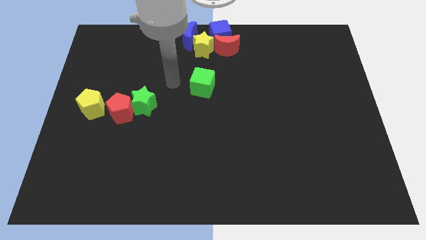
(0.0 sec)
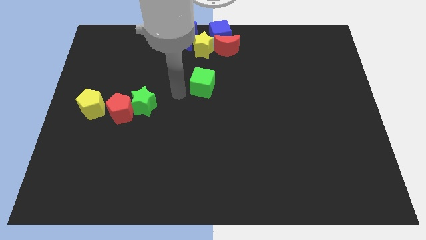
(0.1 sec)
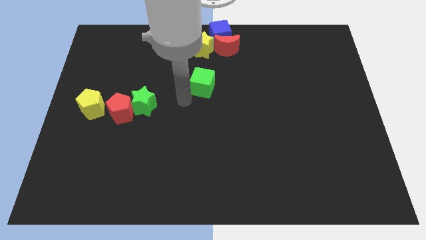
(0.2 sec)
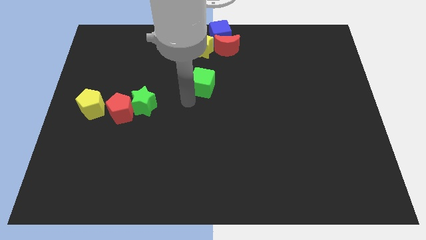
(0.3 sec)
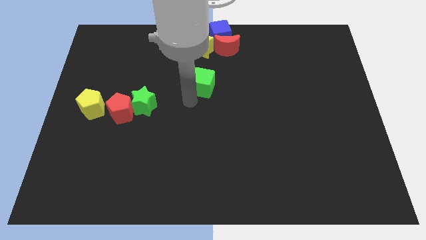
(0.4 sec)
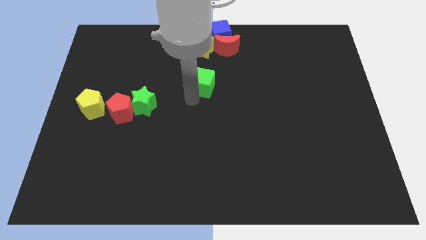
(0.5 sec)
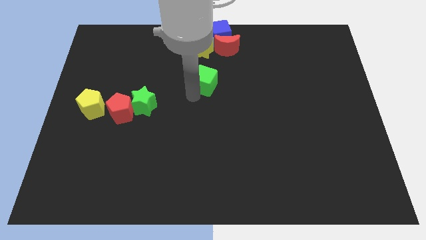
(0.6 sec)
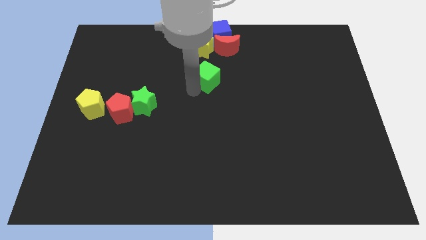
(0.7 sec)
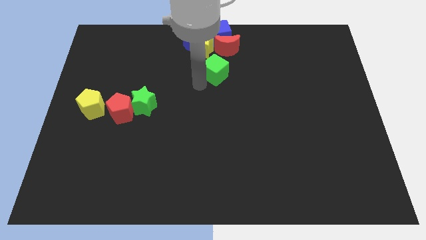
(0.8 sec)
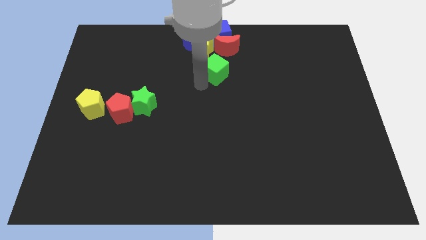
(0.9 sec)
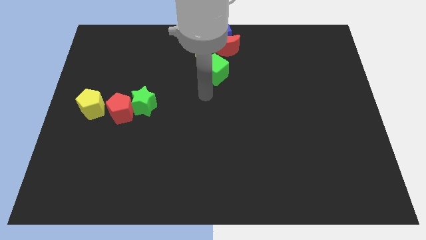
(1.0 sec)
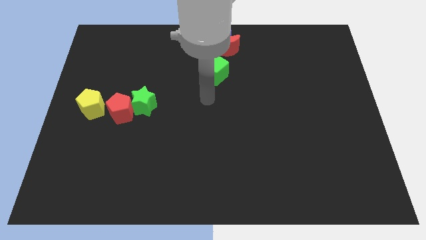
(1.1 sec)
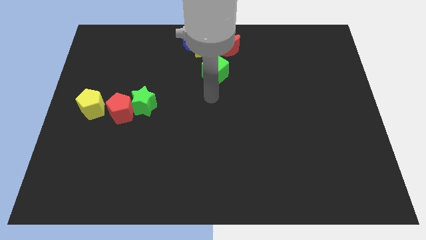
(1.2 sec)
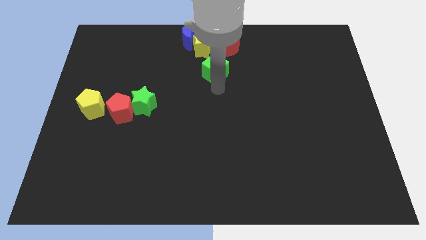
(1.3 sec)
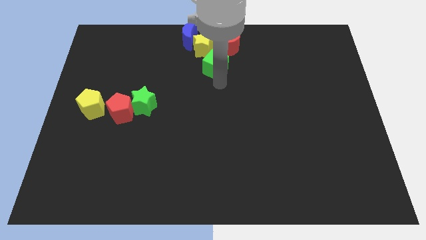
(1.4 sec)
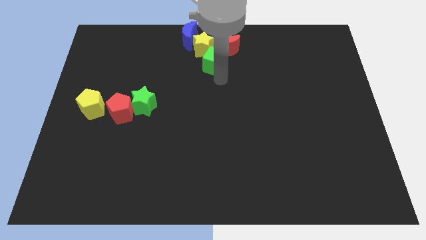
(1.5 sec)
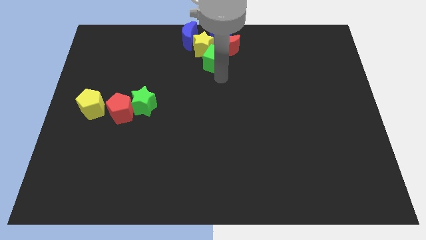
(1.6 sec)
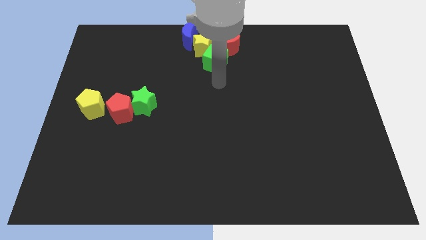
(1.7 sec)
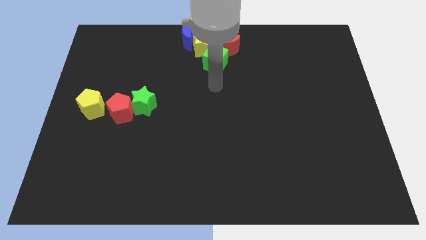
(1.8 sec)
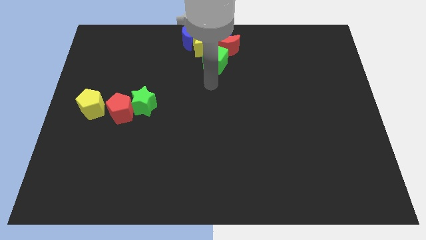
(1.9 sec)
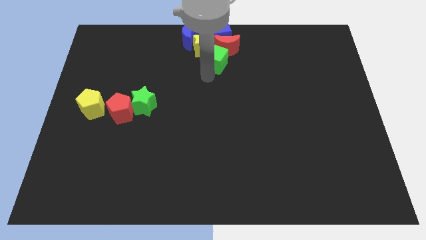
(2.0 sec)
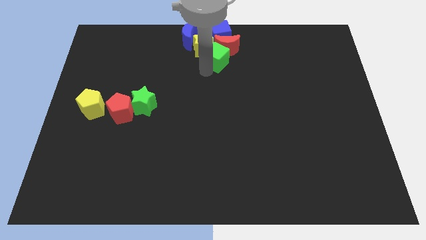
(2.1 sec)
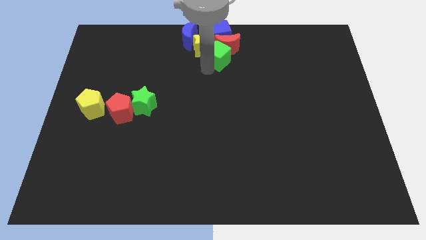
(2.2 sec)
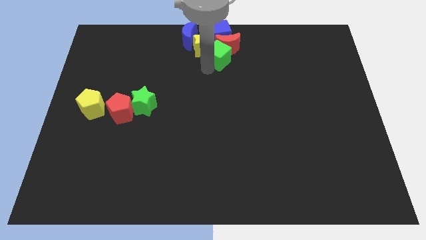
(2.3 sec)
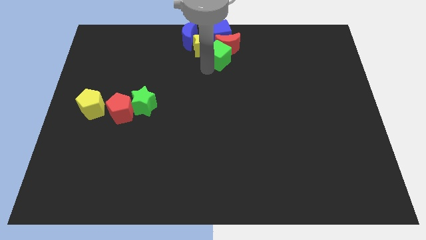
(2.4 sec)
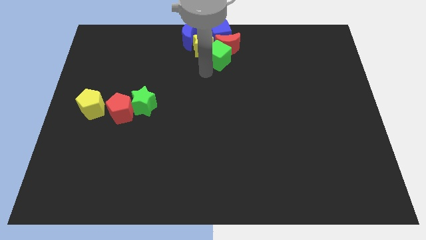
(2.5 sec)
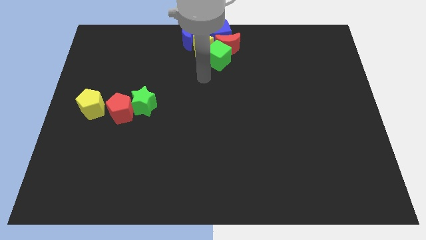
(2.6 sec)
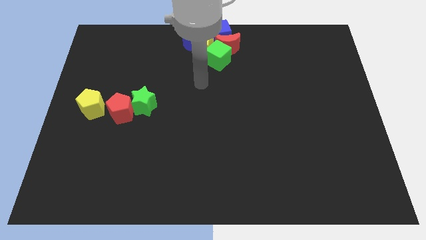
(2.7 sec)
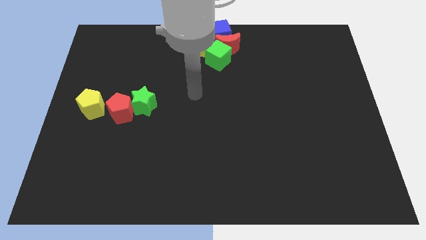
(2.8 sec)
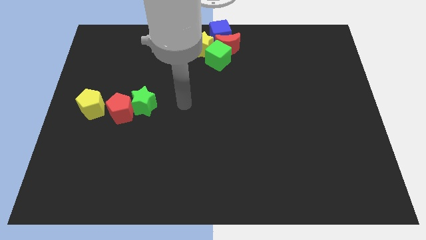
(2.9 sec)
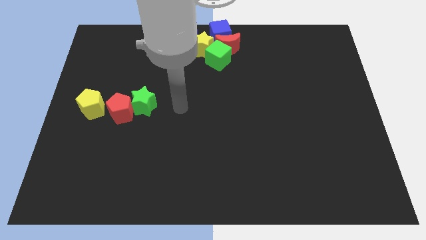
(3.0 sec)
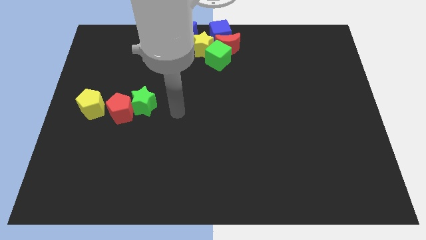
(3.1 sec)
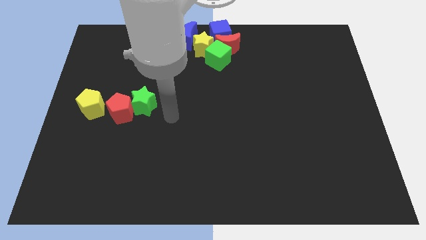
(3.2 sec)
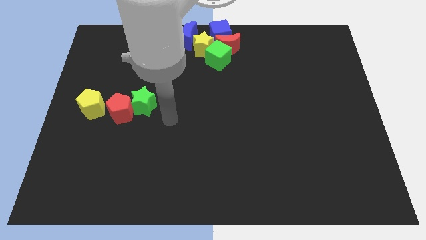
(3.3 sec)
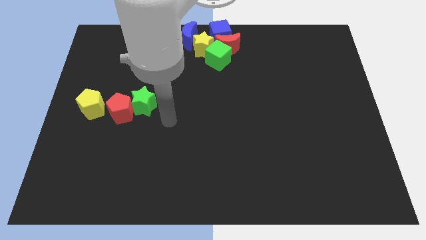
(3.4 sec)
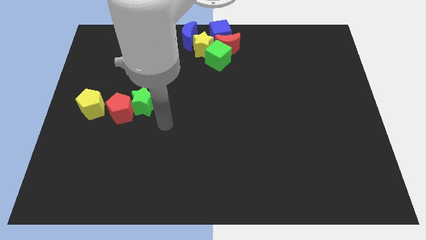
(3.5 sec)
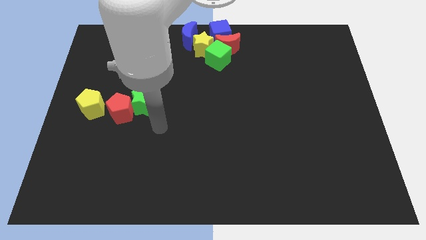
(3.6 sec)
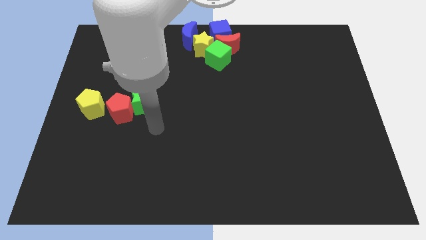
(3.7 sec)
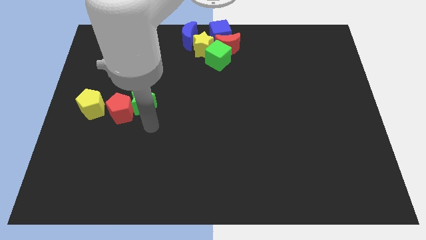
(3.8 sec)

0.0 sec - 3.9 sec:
move green block into the group of objects

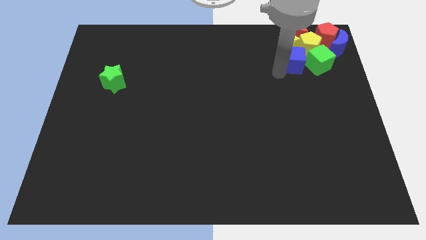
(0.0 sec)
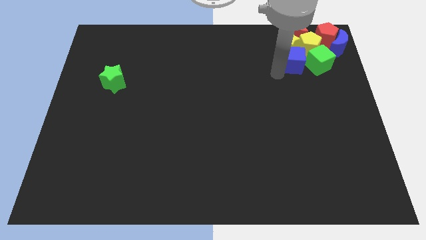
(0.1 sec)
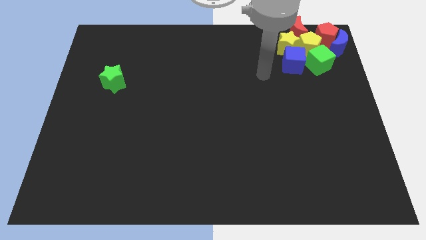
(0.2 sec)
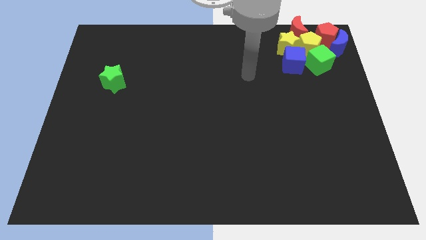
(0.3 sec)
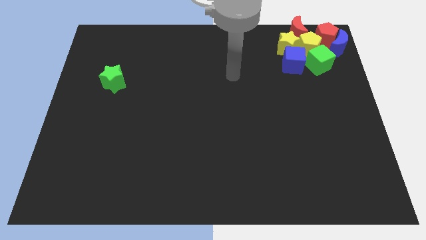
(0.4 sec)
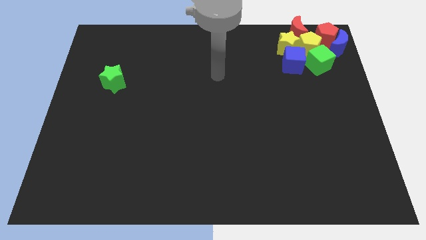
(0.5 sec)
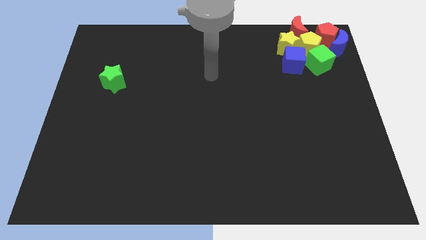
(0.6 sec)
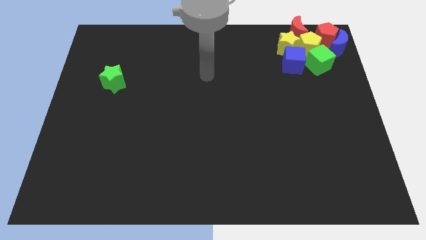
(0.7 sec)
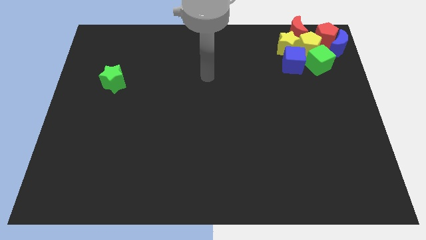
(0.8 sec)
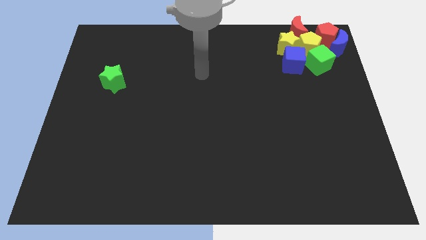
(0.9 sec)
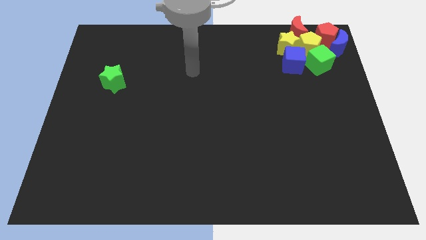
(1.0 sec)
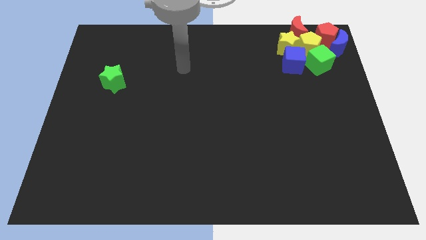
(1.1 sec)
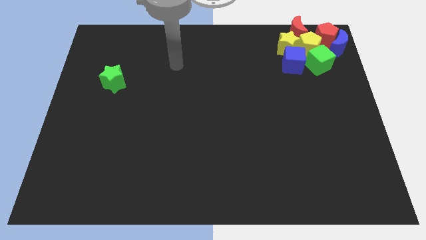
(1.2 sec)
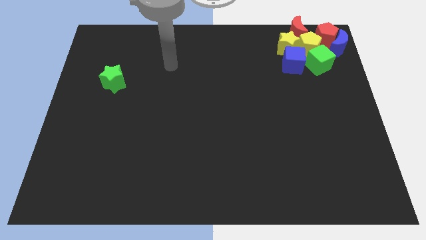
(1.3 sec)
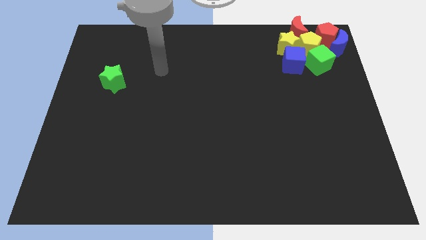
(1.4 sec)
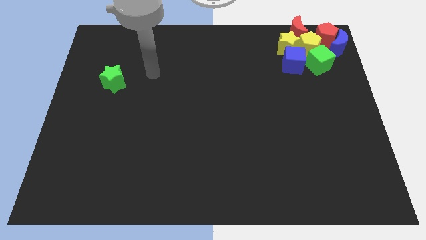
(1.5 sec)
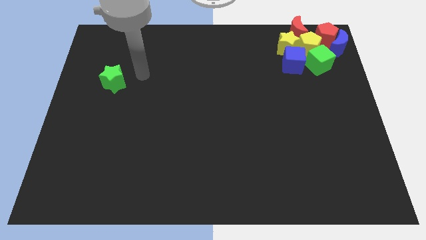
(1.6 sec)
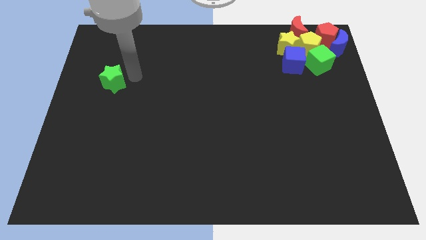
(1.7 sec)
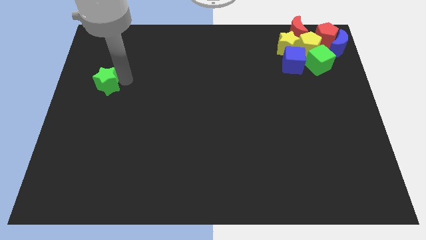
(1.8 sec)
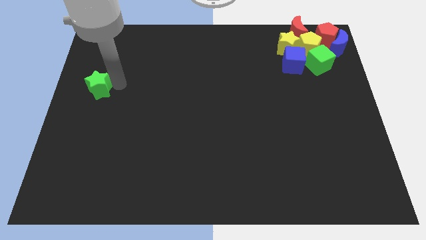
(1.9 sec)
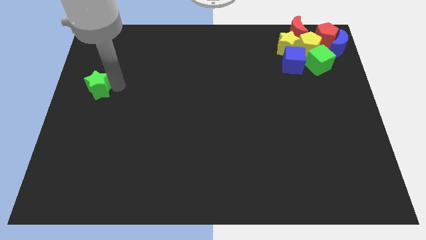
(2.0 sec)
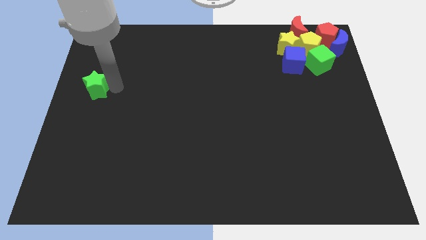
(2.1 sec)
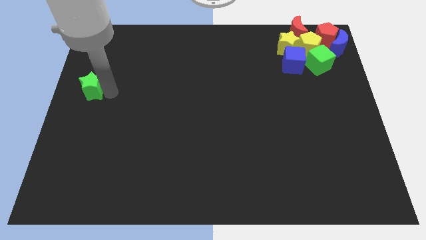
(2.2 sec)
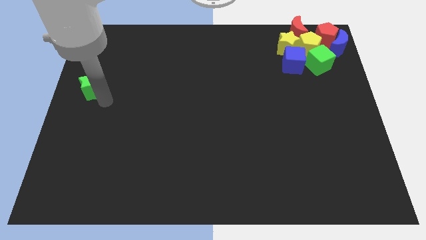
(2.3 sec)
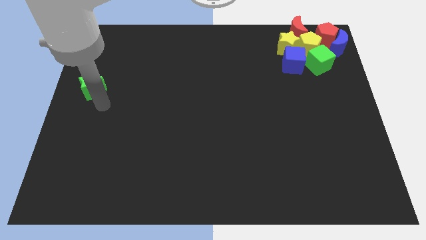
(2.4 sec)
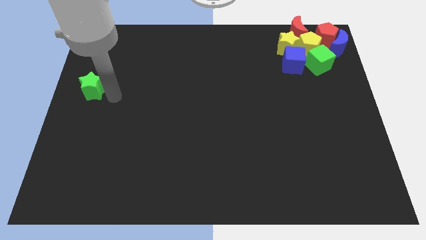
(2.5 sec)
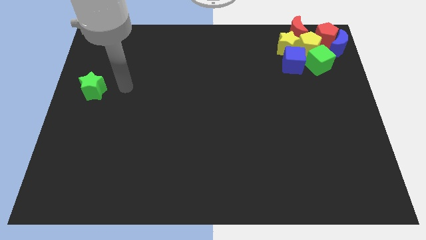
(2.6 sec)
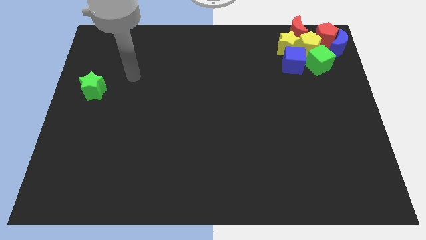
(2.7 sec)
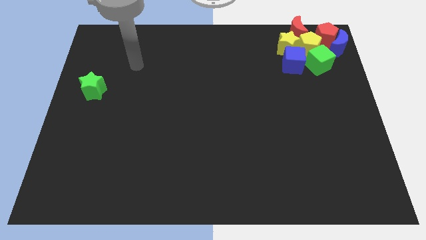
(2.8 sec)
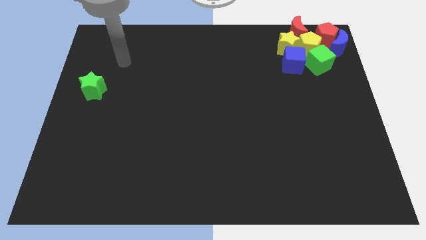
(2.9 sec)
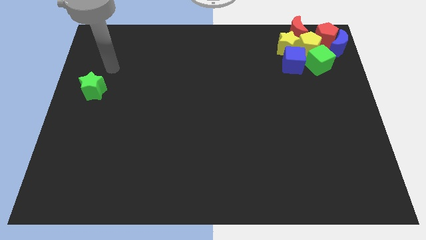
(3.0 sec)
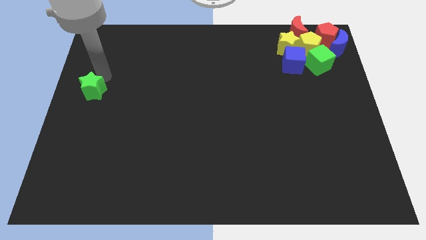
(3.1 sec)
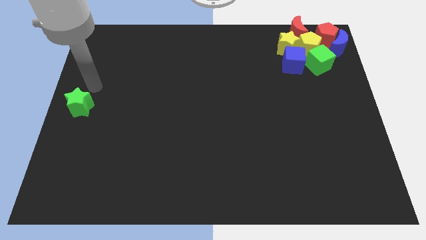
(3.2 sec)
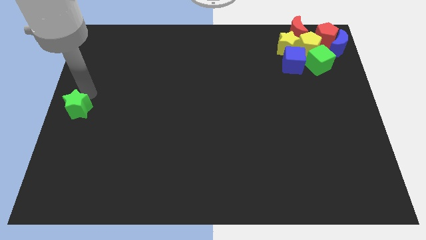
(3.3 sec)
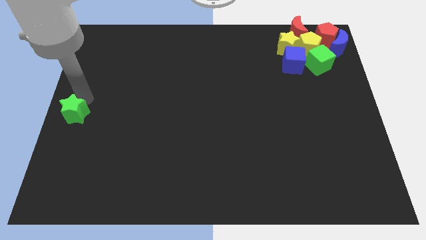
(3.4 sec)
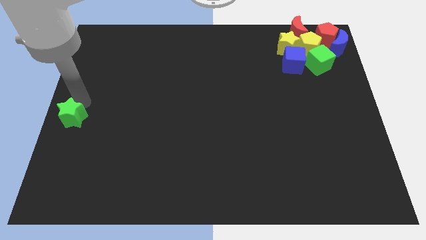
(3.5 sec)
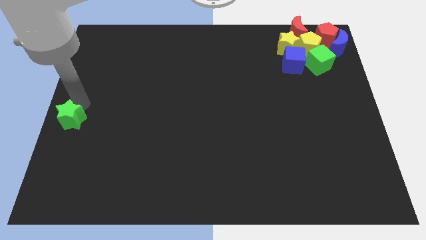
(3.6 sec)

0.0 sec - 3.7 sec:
push the green star to the left center of the board

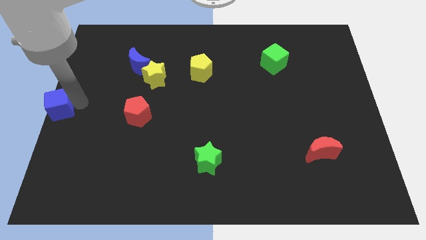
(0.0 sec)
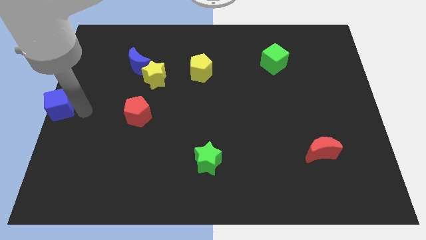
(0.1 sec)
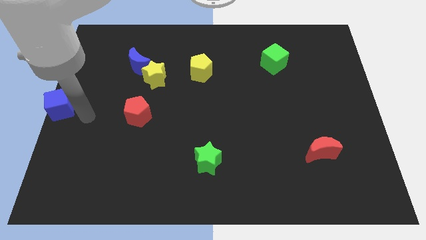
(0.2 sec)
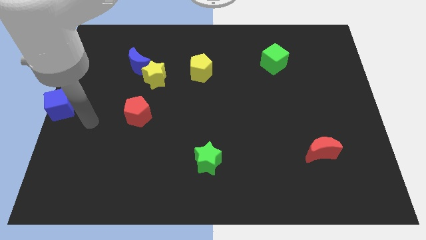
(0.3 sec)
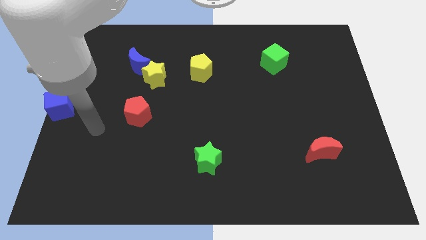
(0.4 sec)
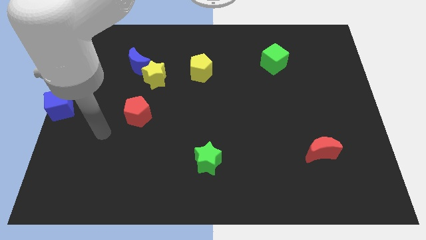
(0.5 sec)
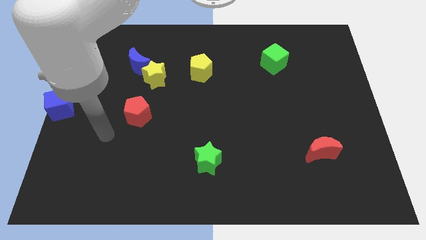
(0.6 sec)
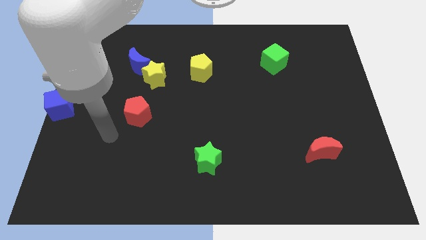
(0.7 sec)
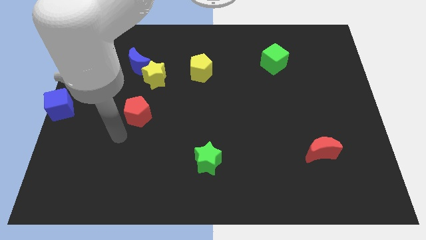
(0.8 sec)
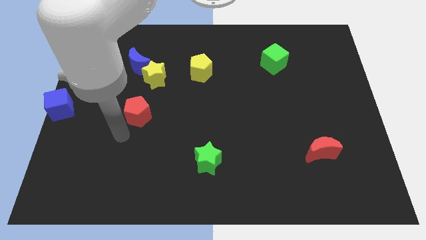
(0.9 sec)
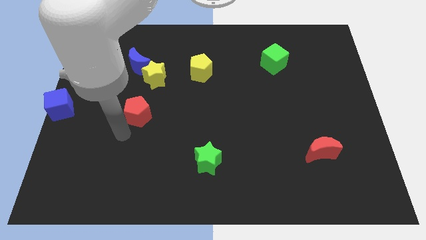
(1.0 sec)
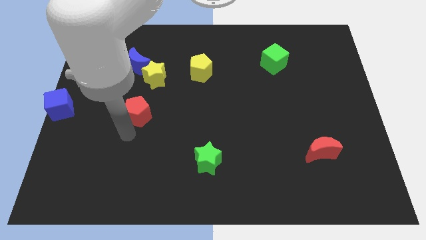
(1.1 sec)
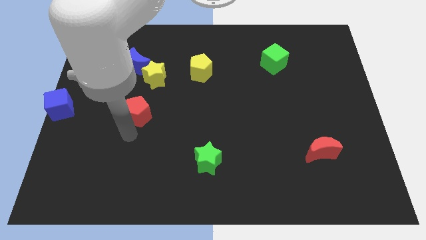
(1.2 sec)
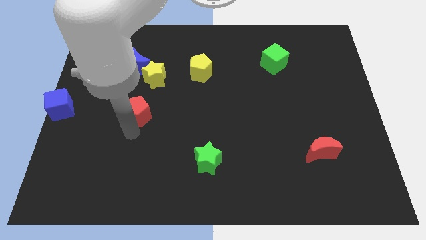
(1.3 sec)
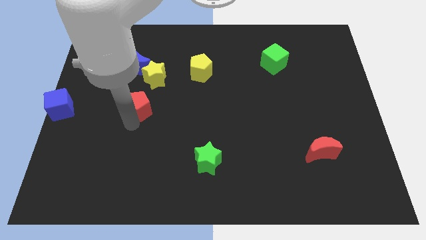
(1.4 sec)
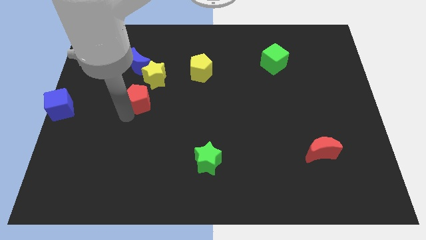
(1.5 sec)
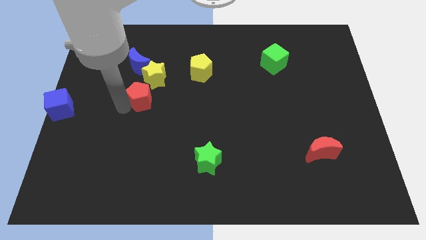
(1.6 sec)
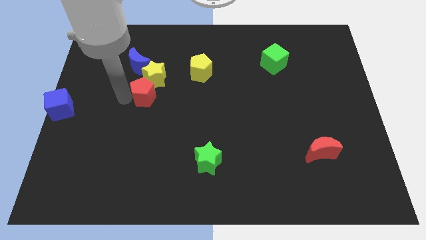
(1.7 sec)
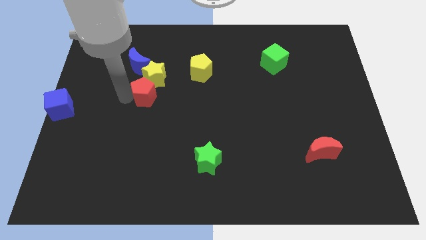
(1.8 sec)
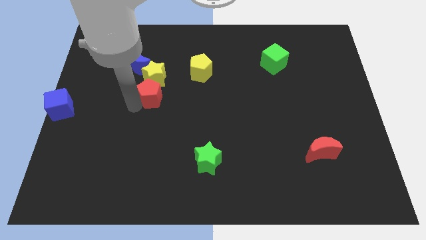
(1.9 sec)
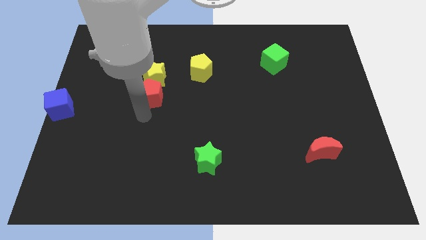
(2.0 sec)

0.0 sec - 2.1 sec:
place the red pentagon at the bottom of the yellow star
